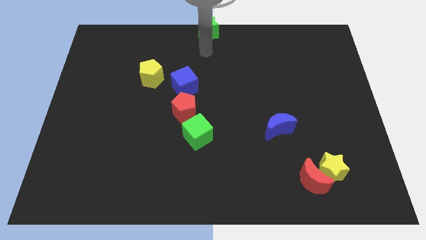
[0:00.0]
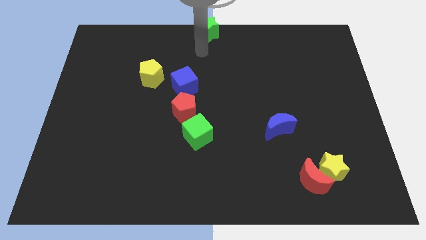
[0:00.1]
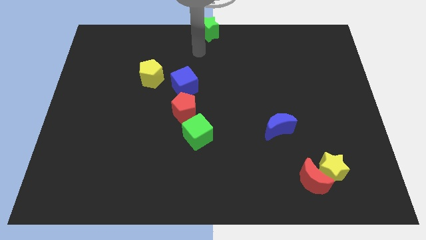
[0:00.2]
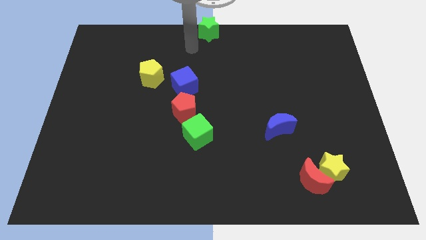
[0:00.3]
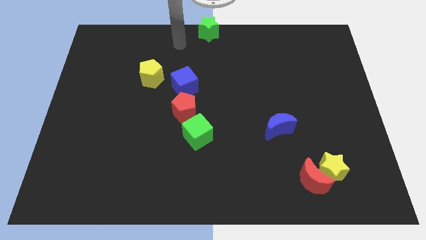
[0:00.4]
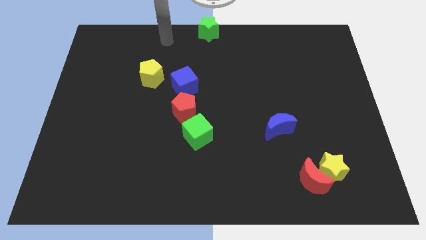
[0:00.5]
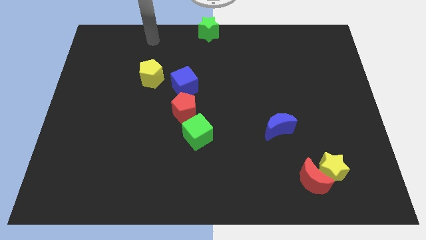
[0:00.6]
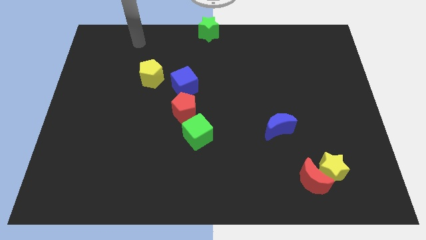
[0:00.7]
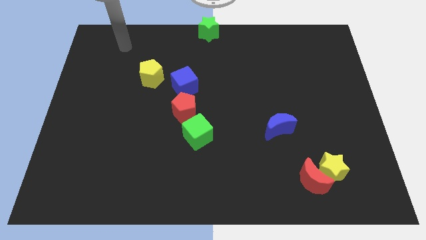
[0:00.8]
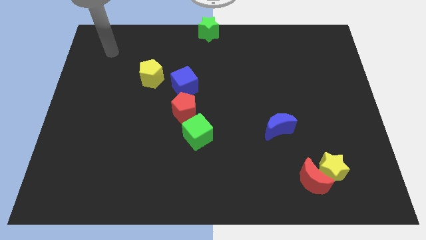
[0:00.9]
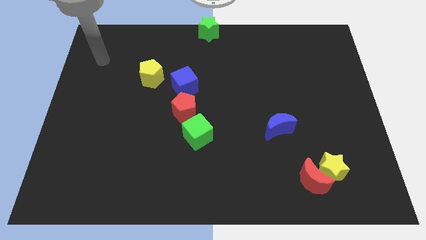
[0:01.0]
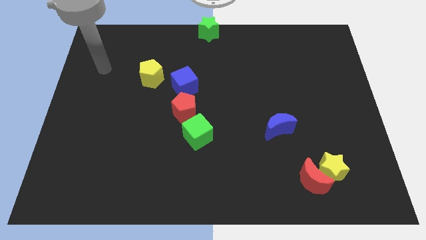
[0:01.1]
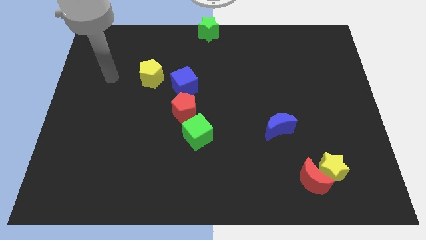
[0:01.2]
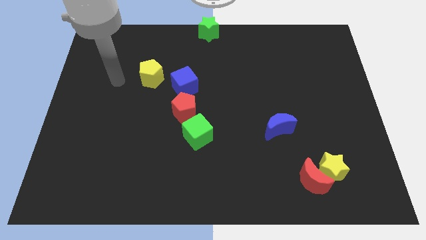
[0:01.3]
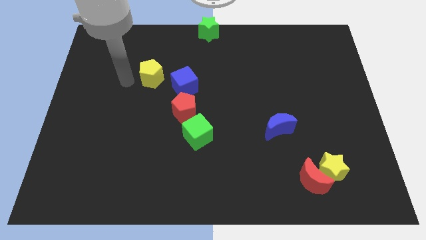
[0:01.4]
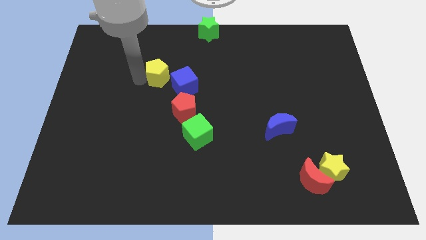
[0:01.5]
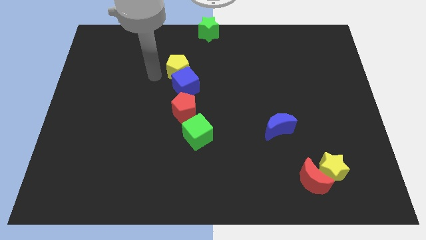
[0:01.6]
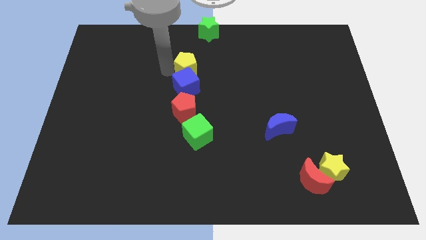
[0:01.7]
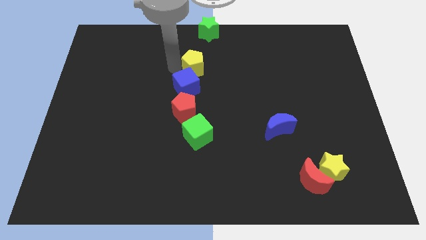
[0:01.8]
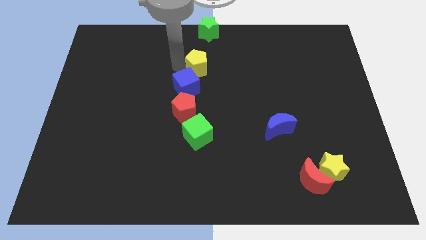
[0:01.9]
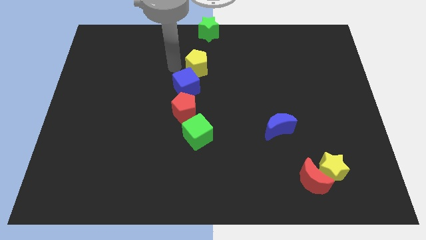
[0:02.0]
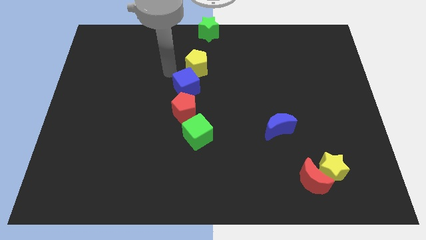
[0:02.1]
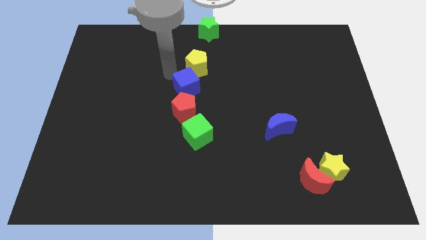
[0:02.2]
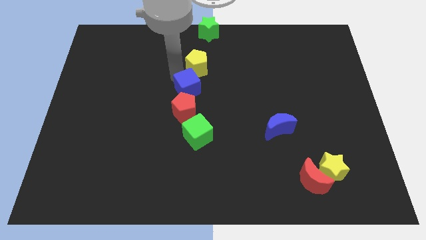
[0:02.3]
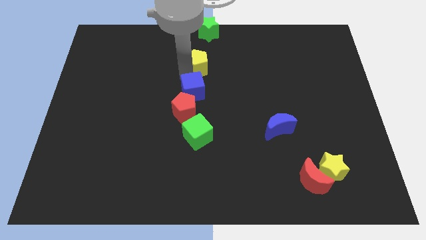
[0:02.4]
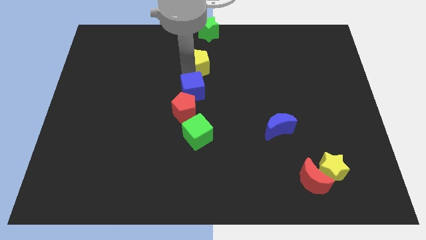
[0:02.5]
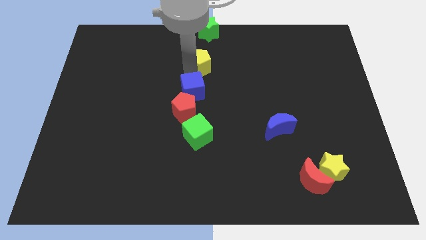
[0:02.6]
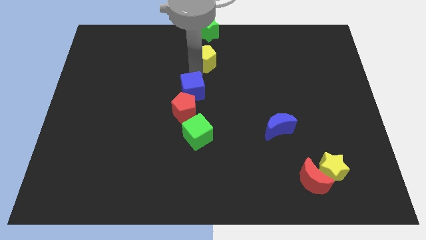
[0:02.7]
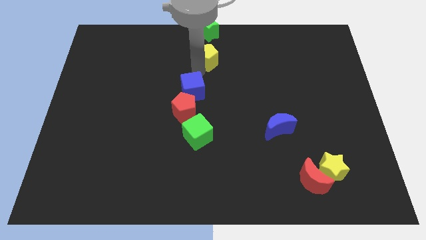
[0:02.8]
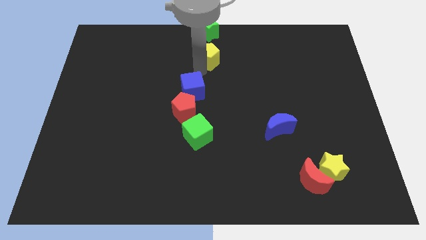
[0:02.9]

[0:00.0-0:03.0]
move the yellow pentagon to the bottom of the green star

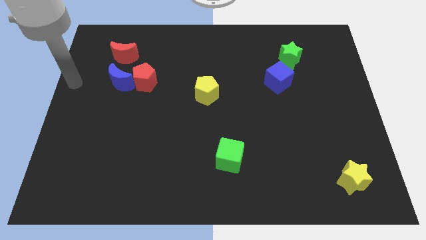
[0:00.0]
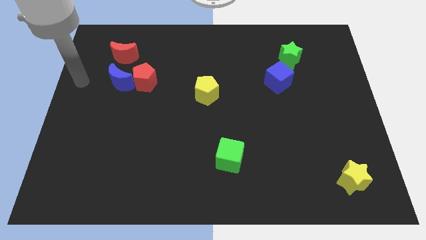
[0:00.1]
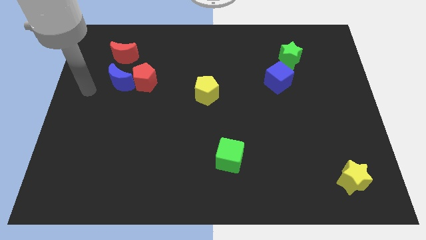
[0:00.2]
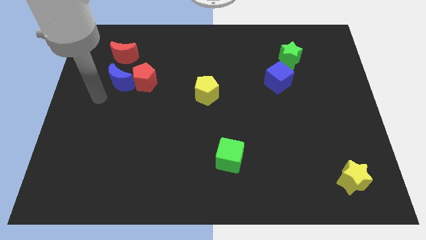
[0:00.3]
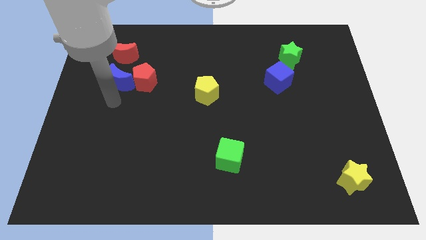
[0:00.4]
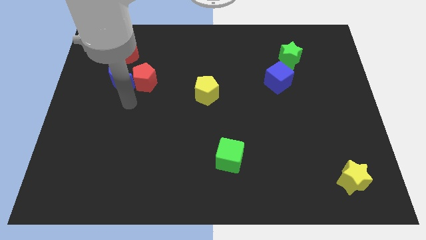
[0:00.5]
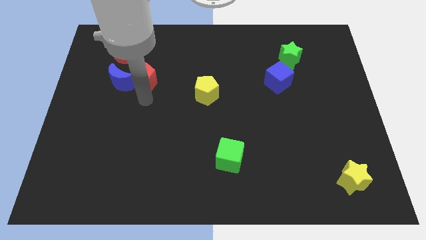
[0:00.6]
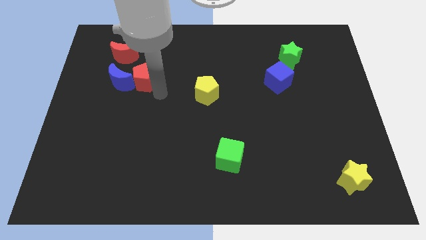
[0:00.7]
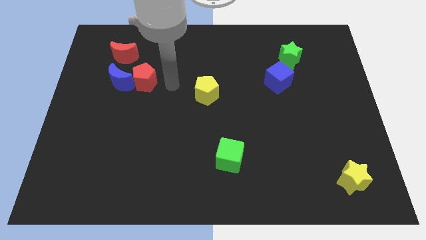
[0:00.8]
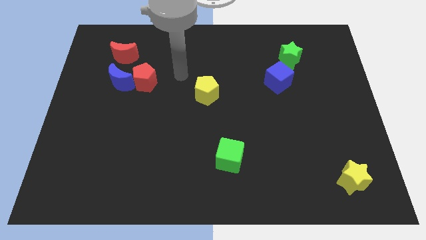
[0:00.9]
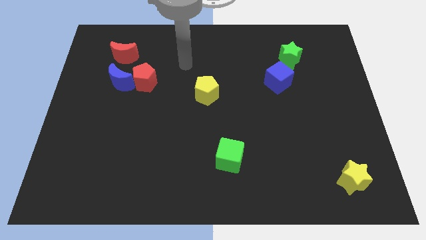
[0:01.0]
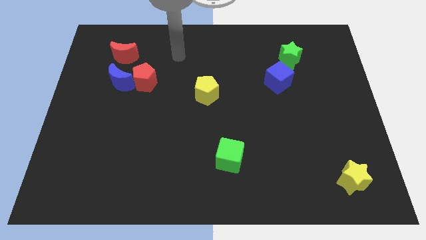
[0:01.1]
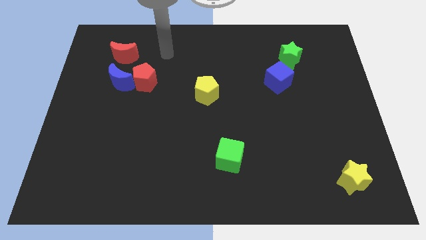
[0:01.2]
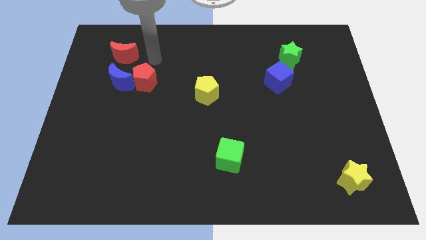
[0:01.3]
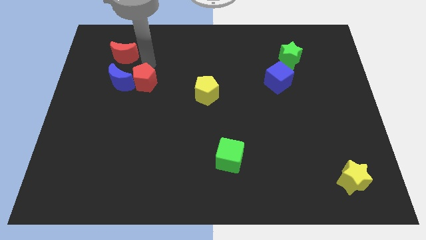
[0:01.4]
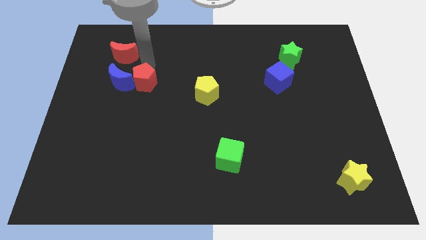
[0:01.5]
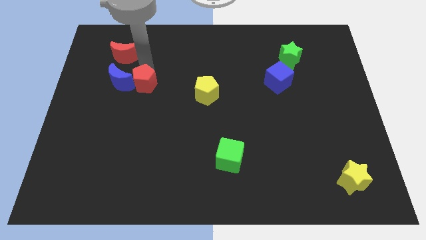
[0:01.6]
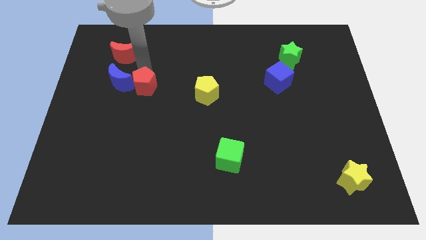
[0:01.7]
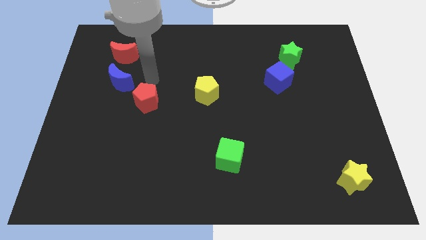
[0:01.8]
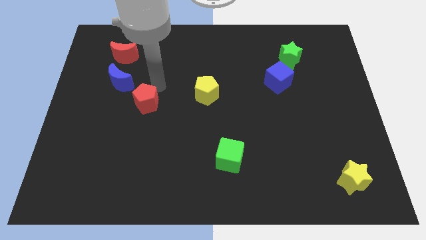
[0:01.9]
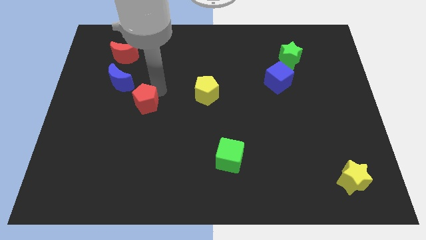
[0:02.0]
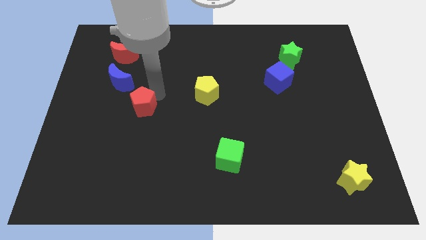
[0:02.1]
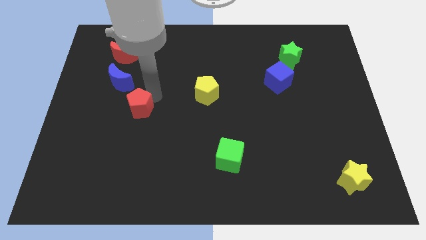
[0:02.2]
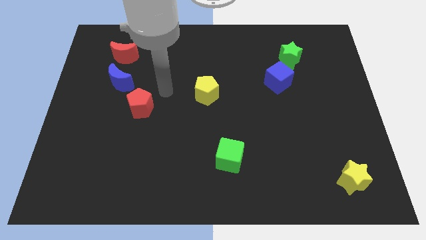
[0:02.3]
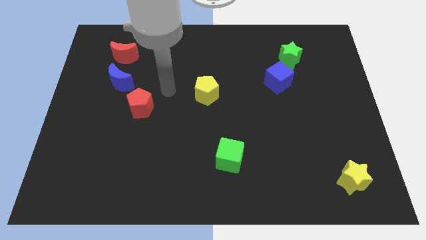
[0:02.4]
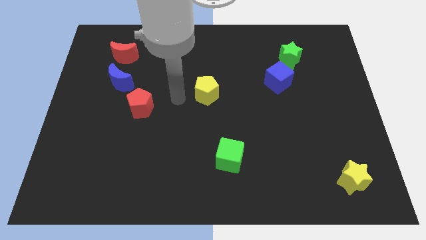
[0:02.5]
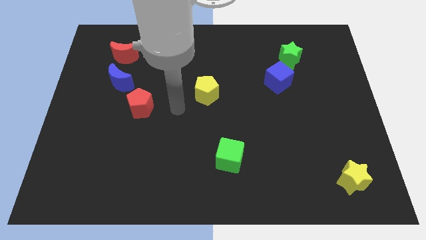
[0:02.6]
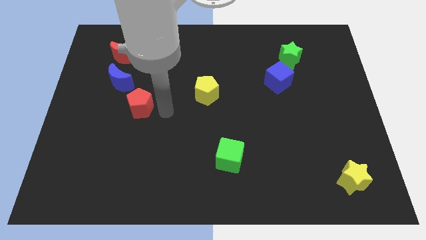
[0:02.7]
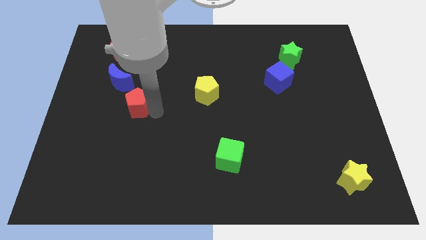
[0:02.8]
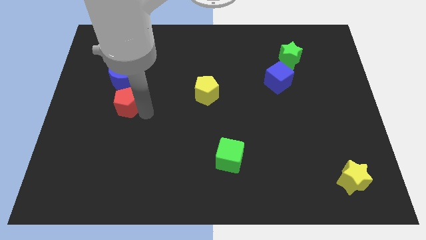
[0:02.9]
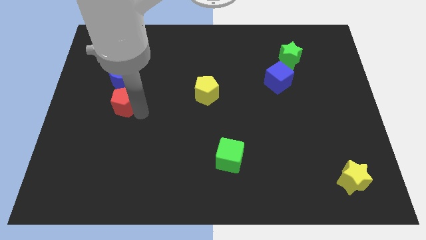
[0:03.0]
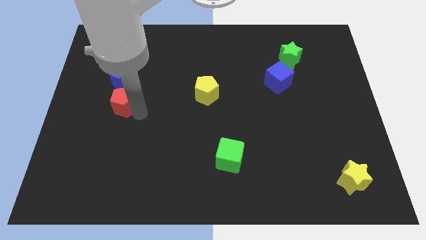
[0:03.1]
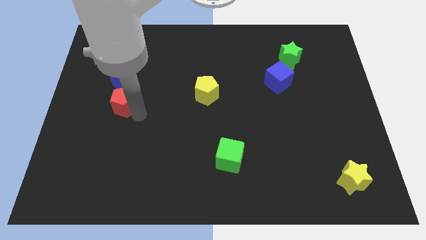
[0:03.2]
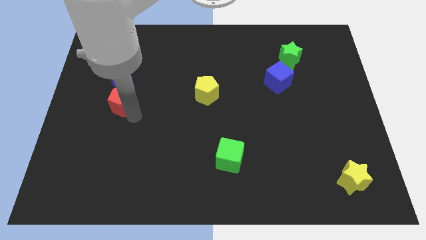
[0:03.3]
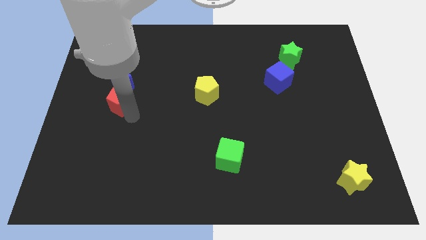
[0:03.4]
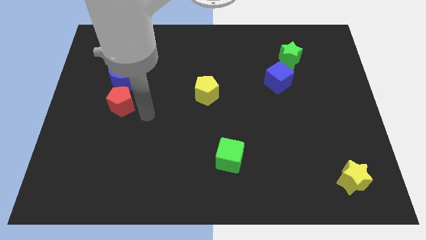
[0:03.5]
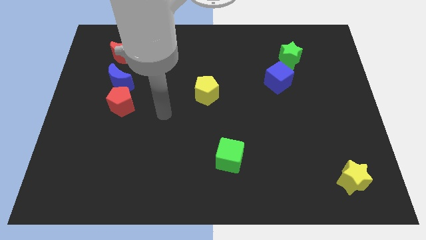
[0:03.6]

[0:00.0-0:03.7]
place the red pentagon left to the yellow pentagon

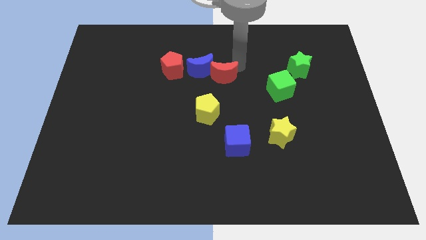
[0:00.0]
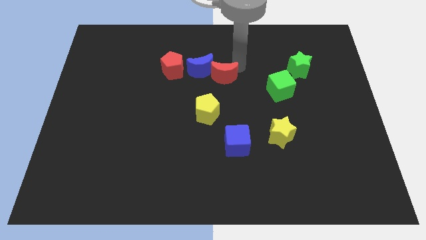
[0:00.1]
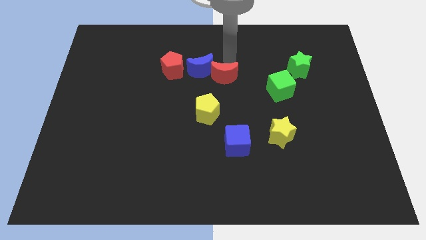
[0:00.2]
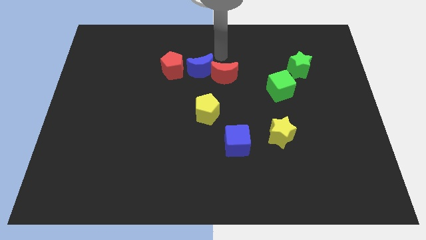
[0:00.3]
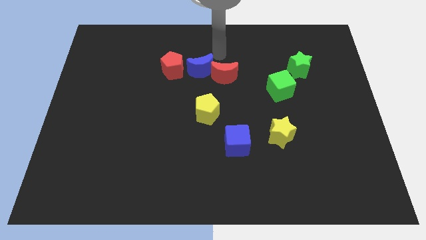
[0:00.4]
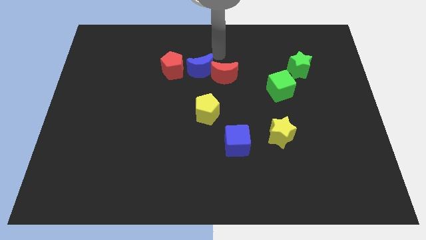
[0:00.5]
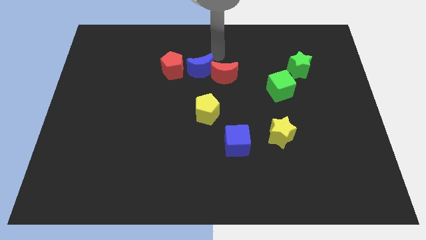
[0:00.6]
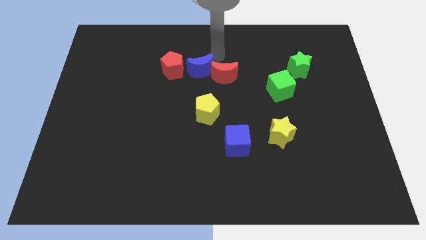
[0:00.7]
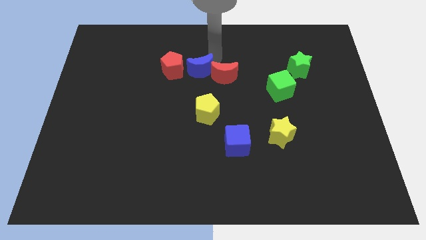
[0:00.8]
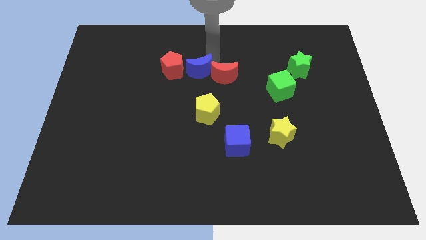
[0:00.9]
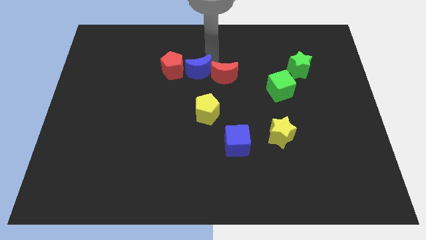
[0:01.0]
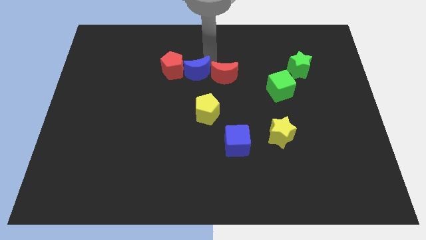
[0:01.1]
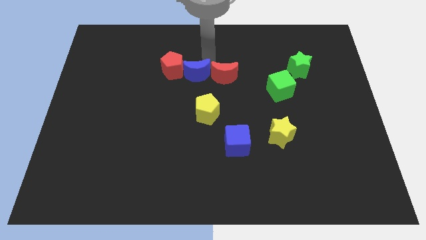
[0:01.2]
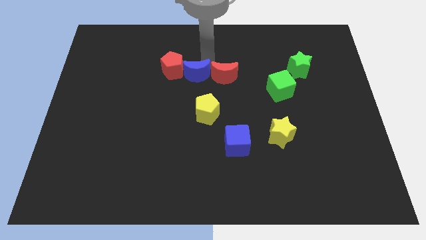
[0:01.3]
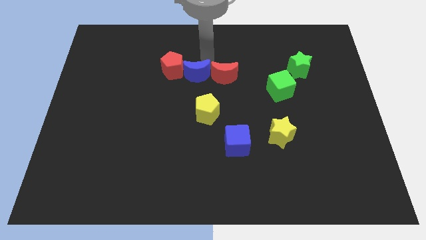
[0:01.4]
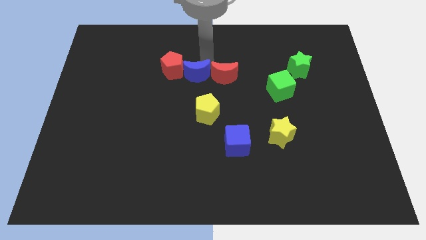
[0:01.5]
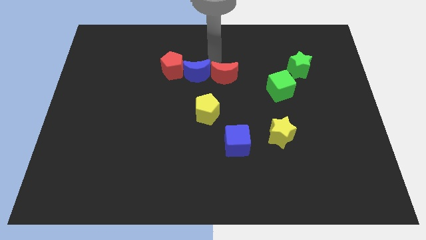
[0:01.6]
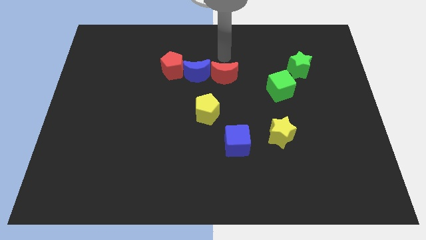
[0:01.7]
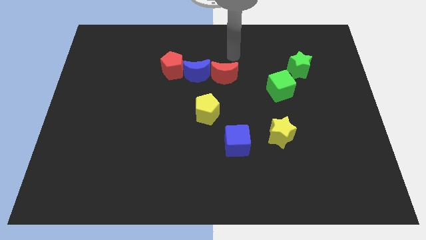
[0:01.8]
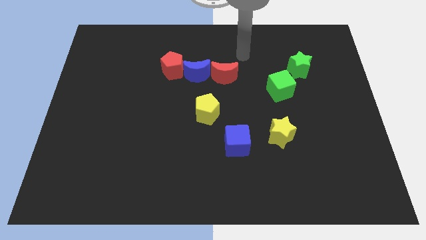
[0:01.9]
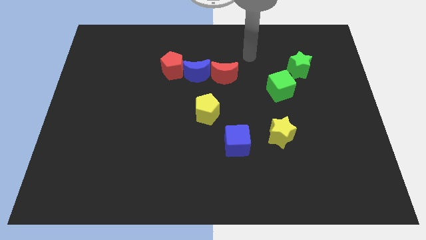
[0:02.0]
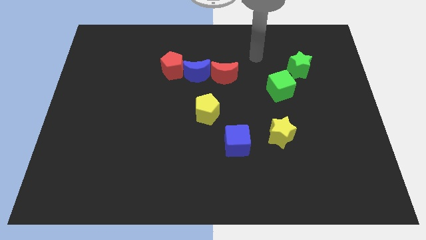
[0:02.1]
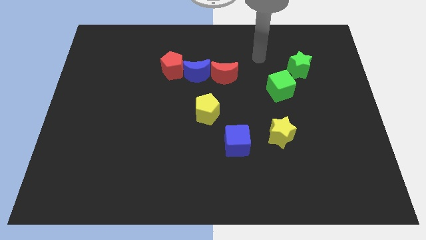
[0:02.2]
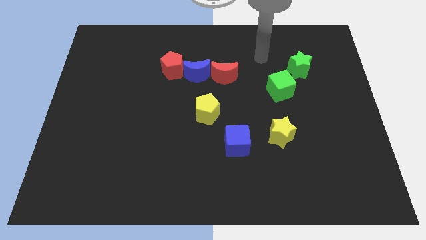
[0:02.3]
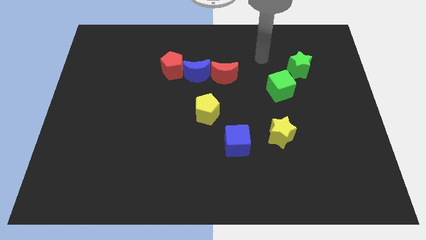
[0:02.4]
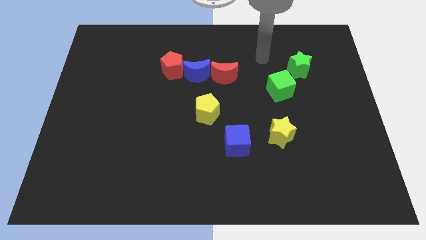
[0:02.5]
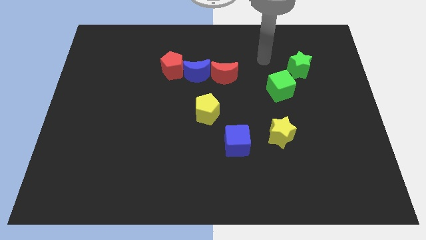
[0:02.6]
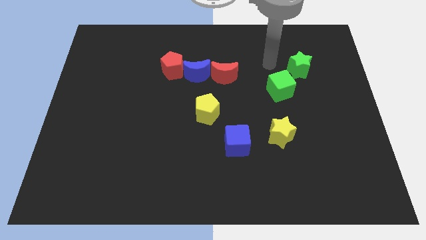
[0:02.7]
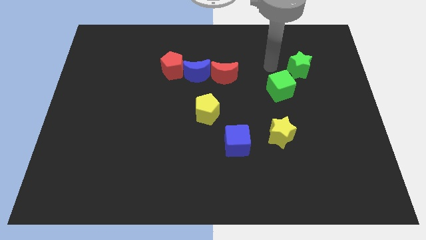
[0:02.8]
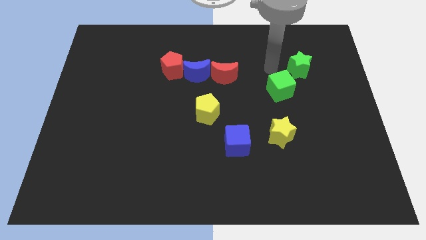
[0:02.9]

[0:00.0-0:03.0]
move blue crescent right to the red pentagon
